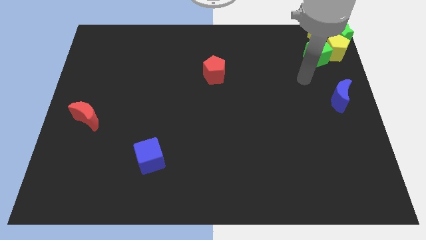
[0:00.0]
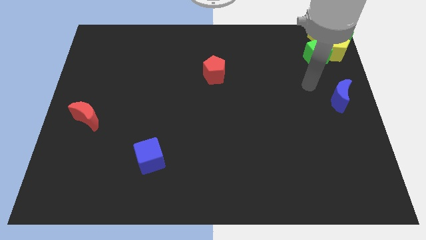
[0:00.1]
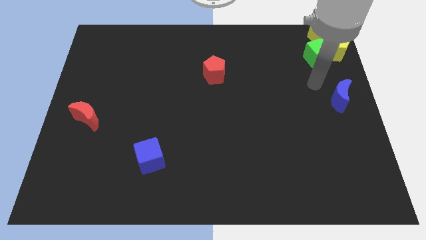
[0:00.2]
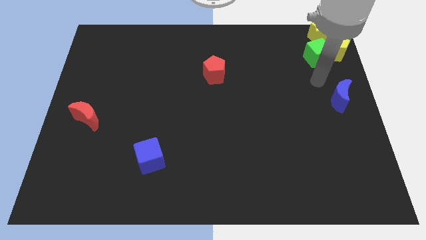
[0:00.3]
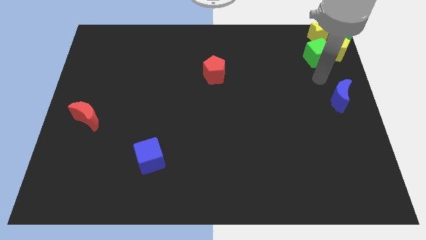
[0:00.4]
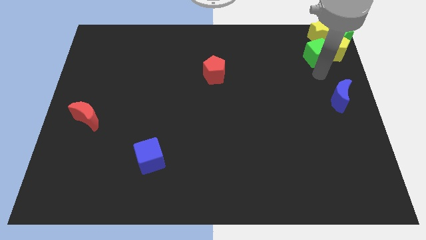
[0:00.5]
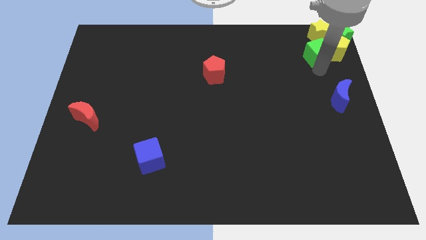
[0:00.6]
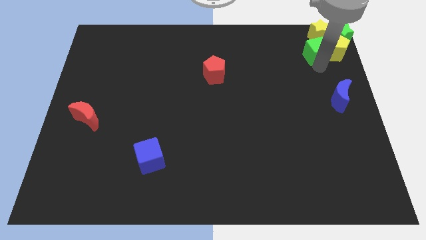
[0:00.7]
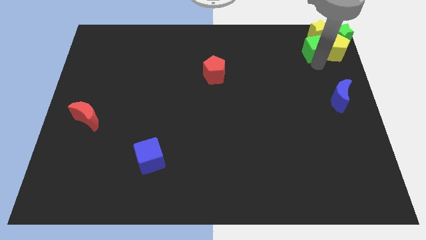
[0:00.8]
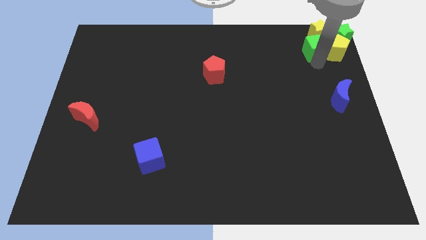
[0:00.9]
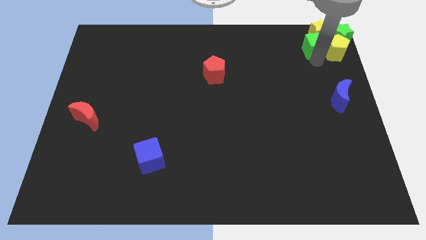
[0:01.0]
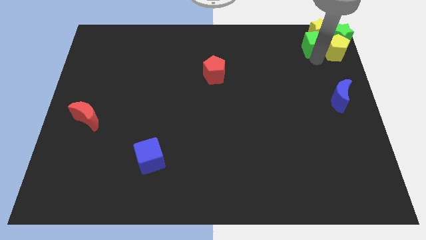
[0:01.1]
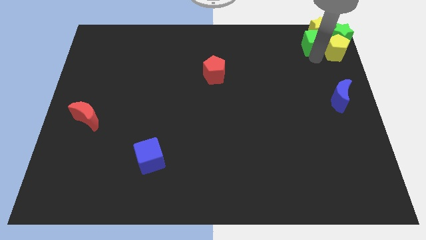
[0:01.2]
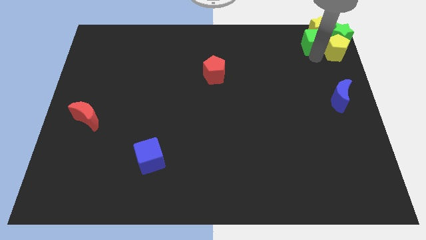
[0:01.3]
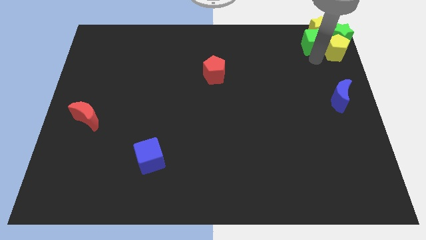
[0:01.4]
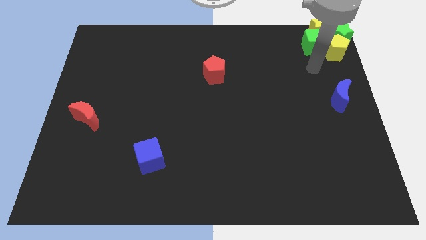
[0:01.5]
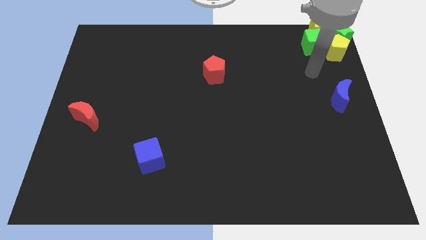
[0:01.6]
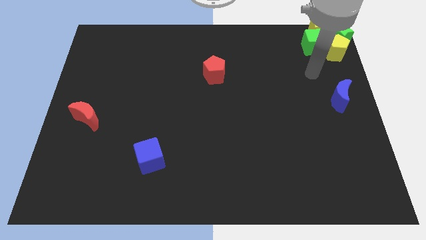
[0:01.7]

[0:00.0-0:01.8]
place a group of blocks at the top right corner of the board

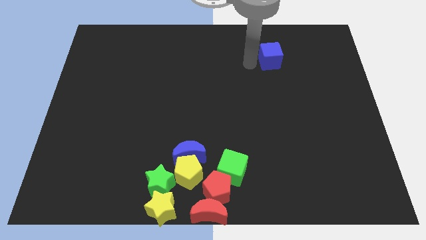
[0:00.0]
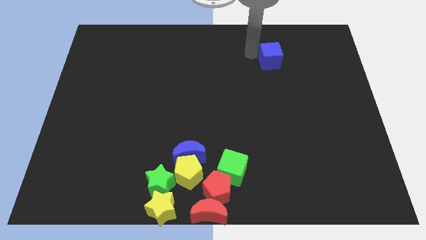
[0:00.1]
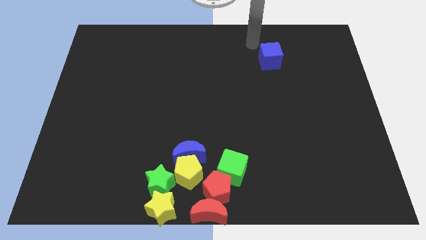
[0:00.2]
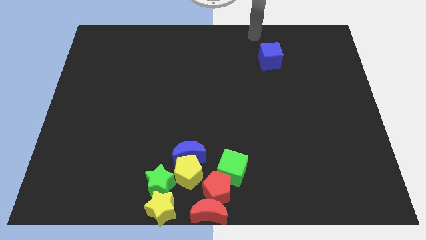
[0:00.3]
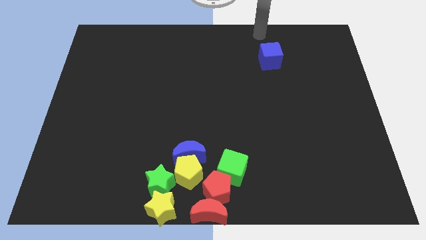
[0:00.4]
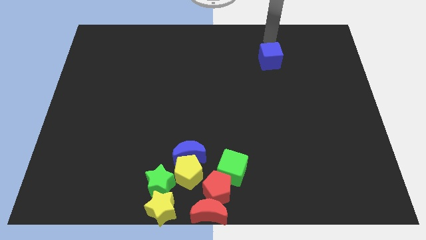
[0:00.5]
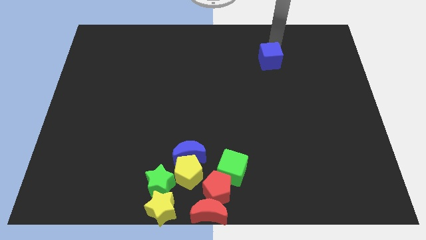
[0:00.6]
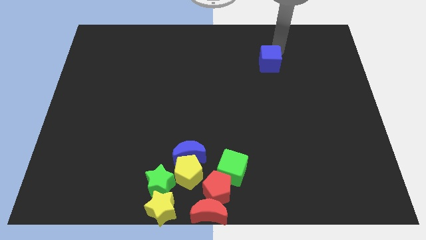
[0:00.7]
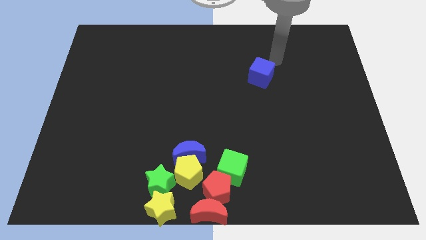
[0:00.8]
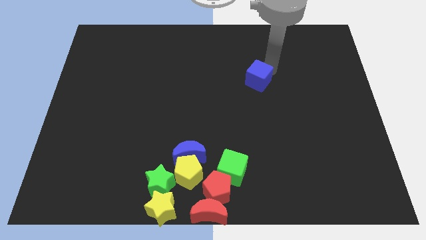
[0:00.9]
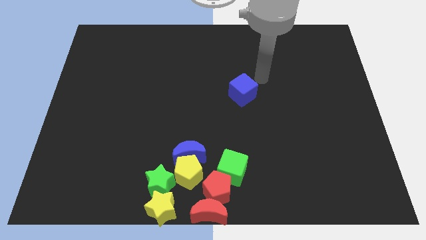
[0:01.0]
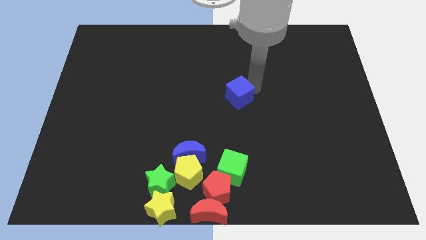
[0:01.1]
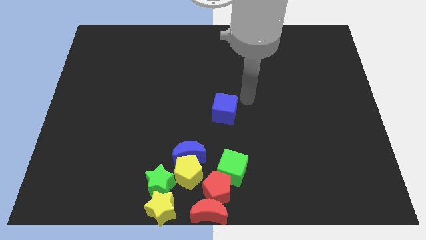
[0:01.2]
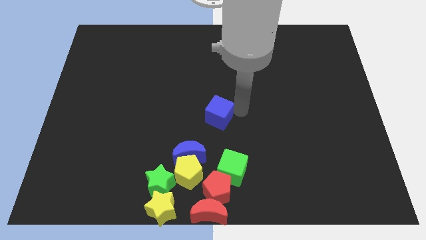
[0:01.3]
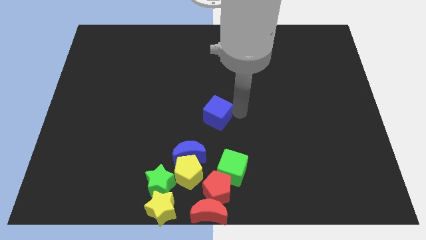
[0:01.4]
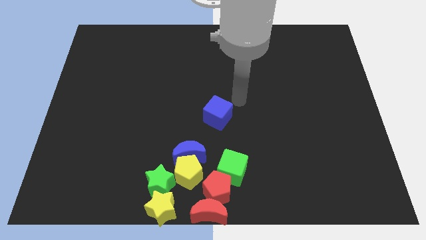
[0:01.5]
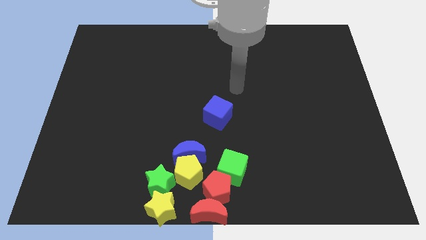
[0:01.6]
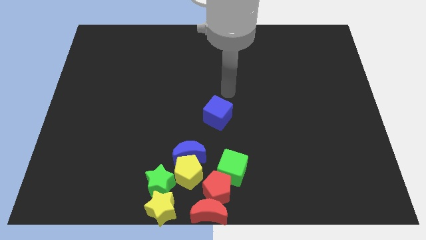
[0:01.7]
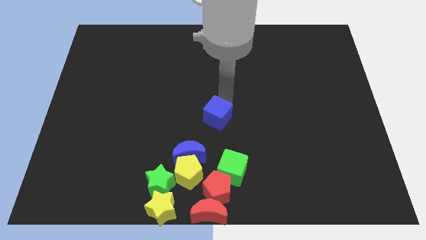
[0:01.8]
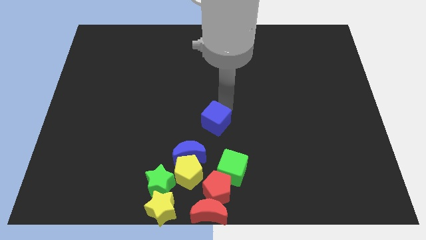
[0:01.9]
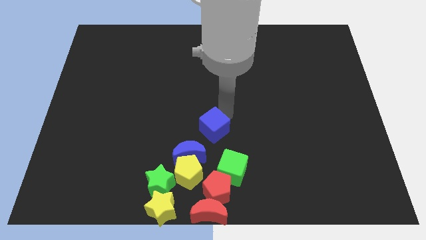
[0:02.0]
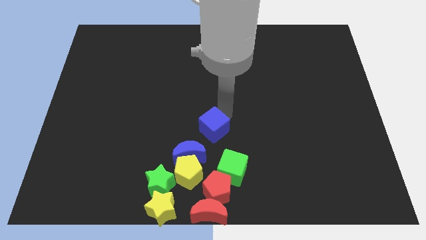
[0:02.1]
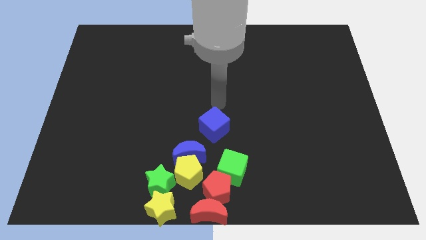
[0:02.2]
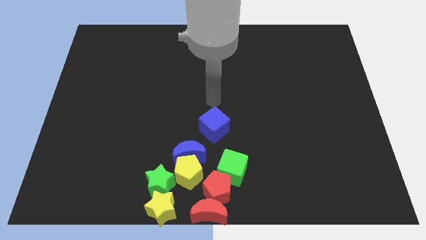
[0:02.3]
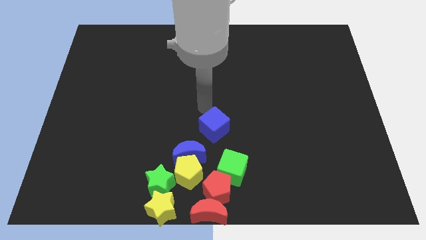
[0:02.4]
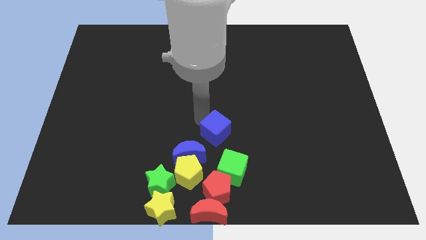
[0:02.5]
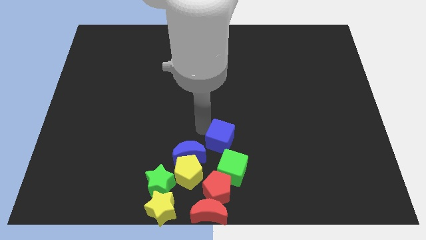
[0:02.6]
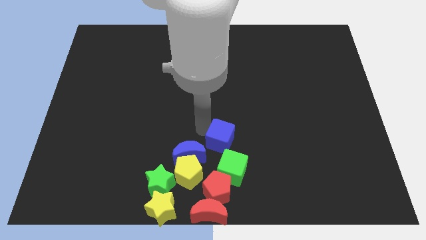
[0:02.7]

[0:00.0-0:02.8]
push the blue cube to the top right of blur crescent

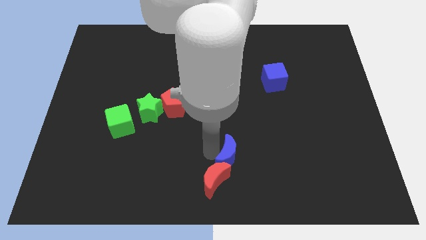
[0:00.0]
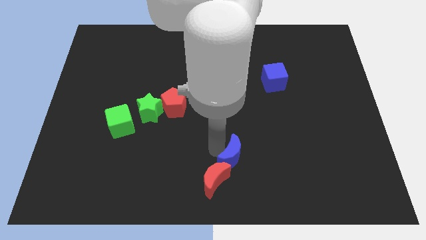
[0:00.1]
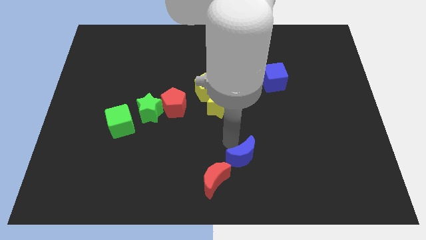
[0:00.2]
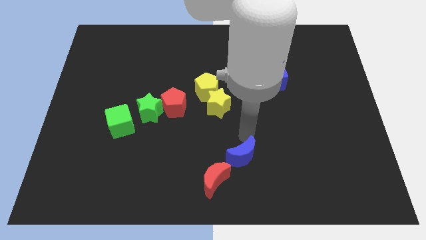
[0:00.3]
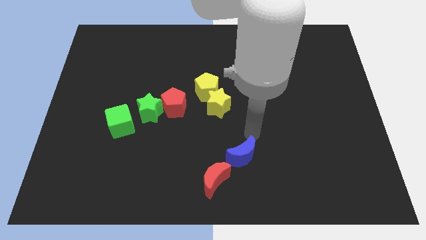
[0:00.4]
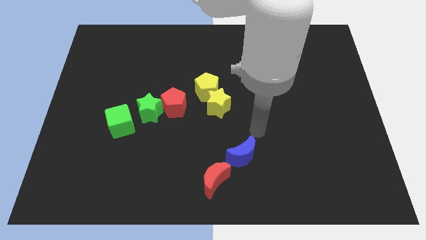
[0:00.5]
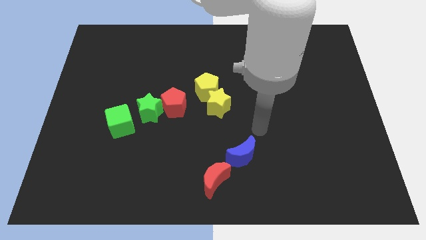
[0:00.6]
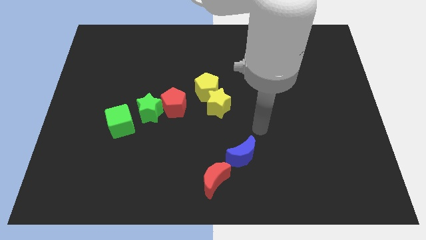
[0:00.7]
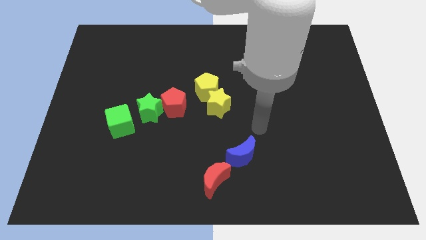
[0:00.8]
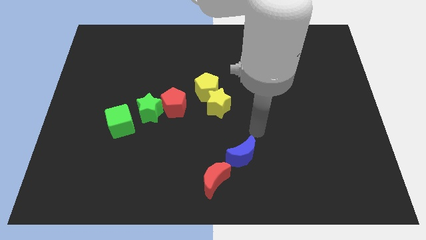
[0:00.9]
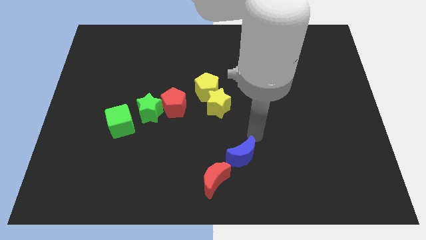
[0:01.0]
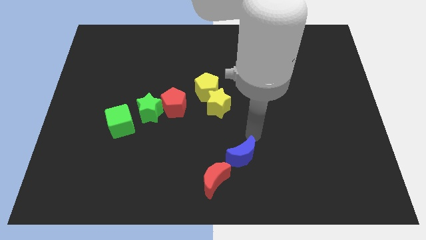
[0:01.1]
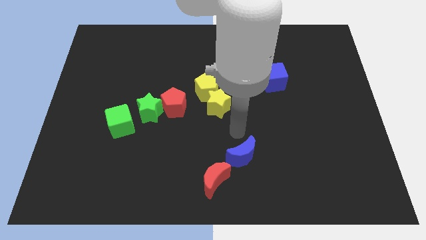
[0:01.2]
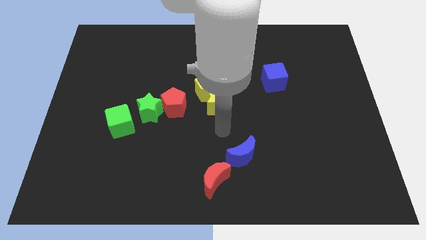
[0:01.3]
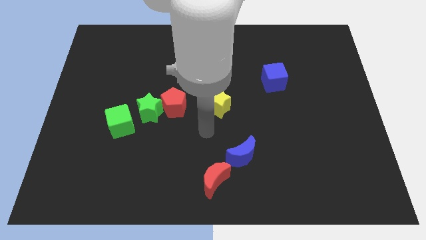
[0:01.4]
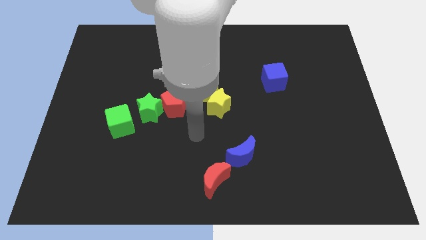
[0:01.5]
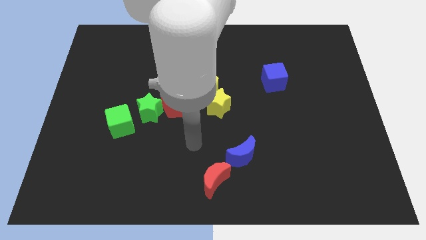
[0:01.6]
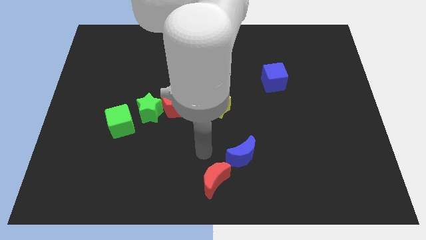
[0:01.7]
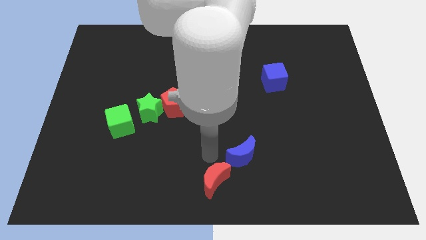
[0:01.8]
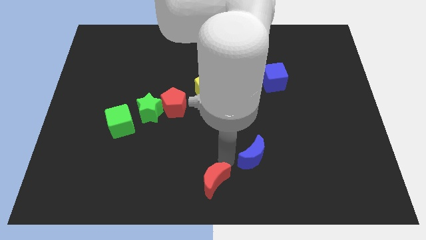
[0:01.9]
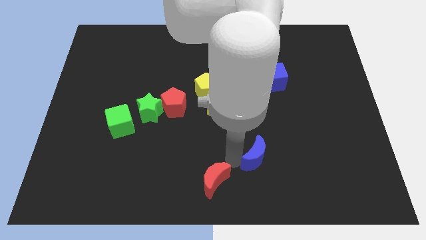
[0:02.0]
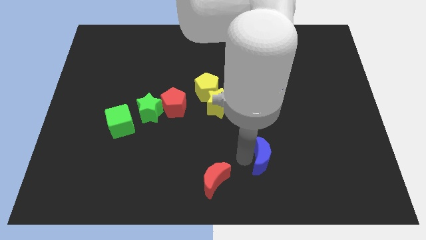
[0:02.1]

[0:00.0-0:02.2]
separate the blue moon from the red moon

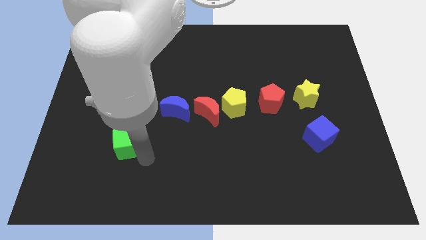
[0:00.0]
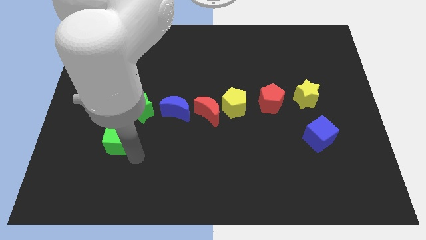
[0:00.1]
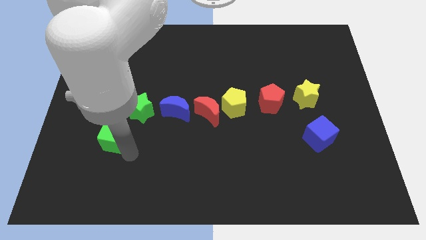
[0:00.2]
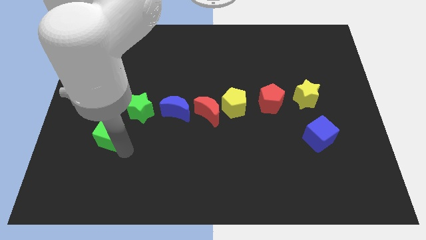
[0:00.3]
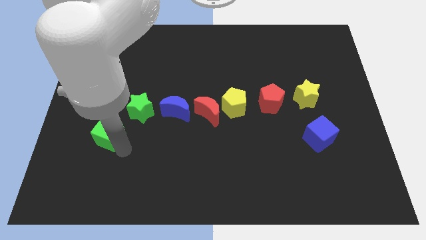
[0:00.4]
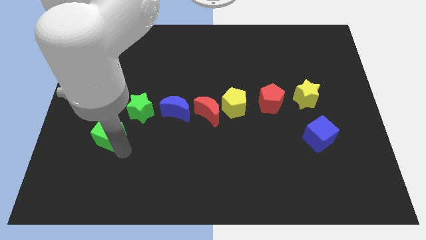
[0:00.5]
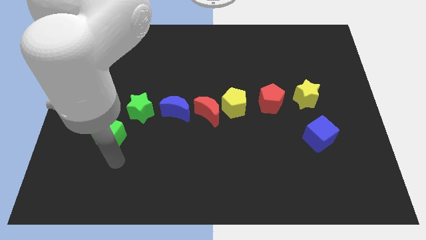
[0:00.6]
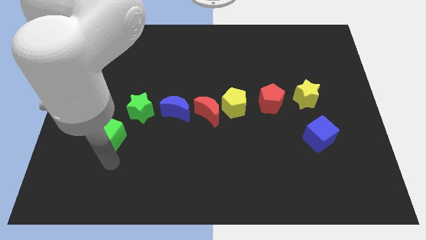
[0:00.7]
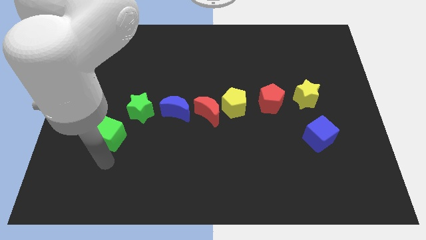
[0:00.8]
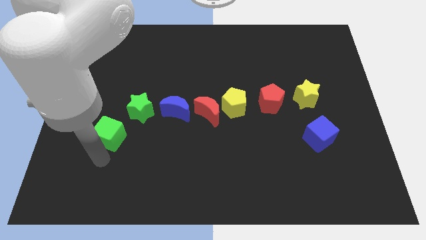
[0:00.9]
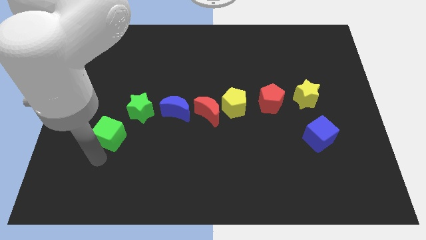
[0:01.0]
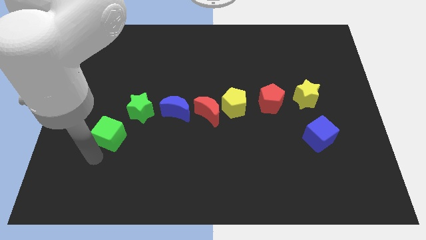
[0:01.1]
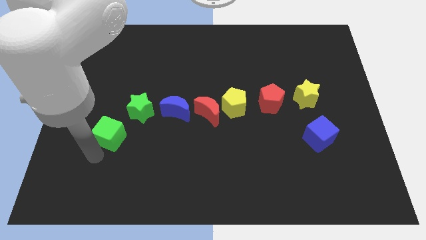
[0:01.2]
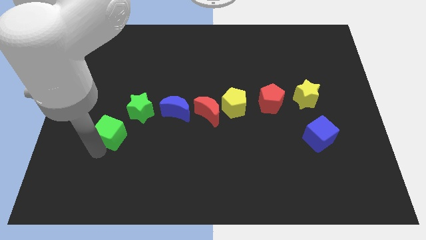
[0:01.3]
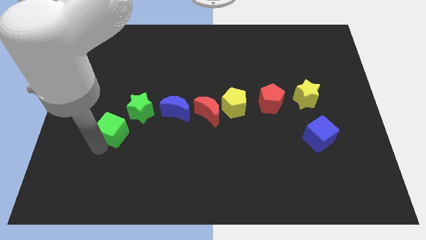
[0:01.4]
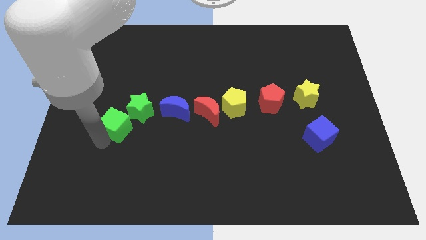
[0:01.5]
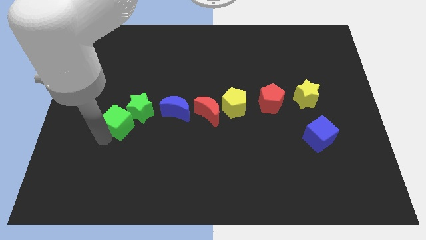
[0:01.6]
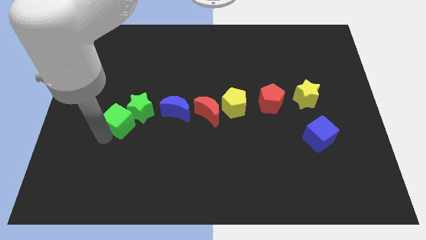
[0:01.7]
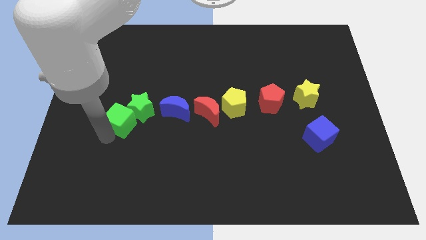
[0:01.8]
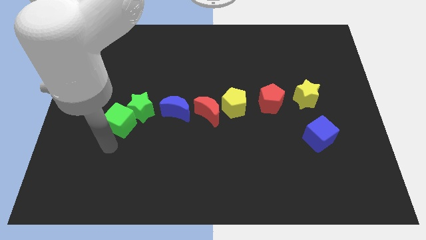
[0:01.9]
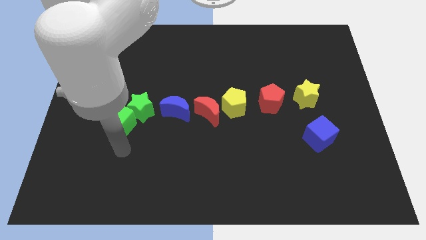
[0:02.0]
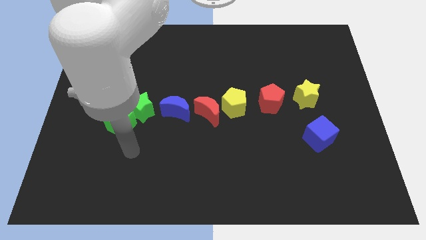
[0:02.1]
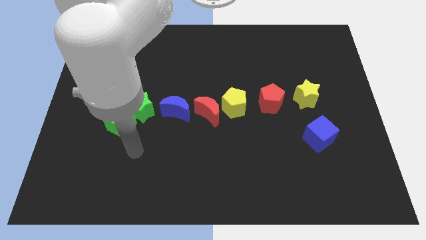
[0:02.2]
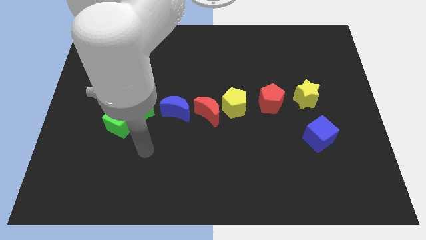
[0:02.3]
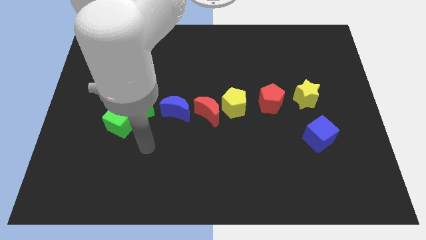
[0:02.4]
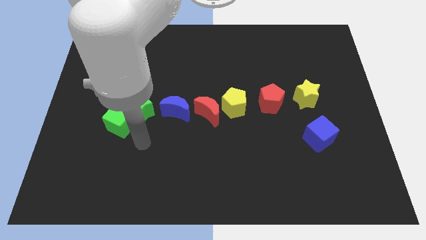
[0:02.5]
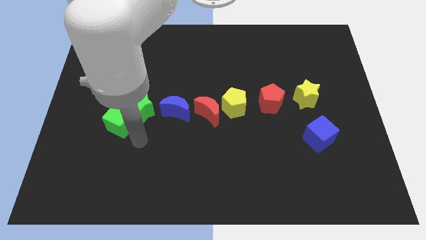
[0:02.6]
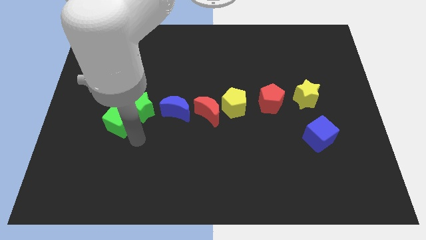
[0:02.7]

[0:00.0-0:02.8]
push the green ube into the green star
